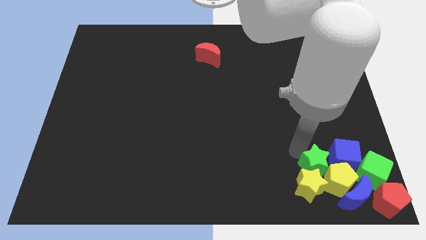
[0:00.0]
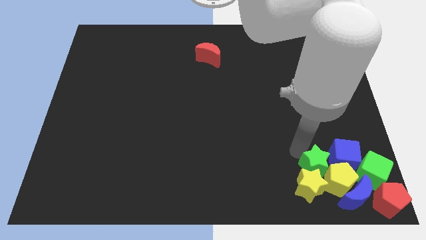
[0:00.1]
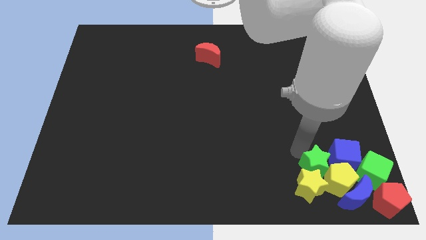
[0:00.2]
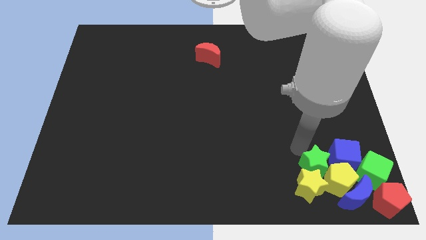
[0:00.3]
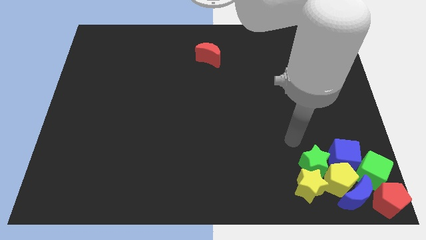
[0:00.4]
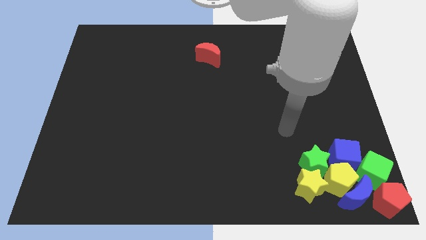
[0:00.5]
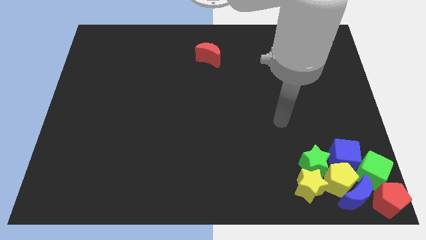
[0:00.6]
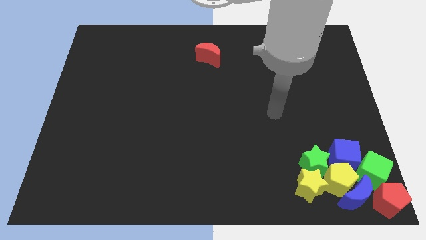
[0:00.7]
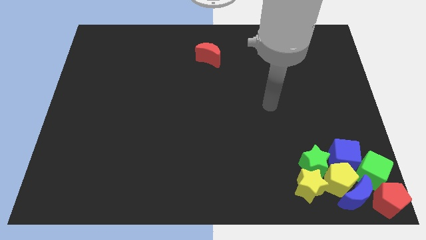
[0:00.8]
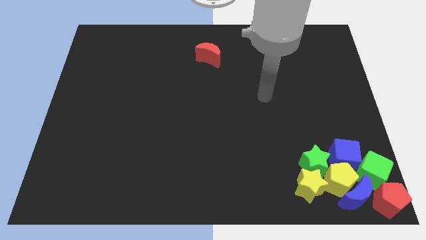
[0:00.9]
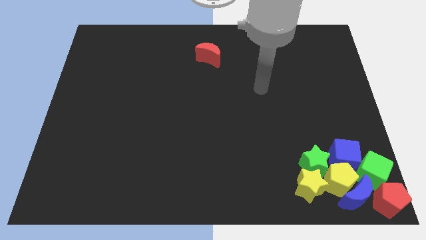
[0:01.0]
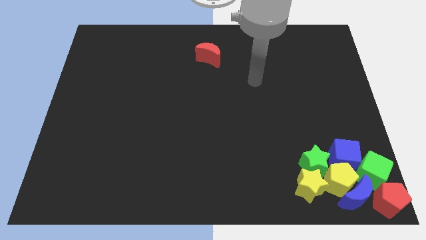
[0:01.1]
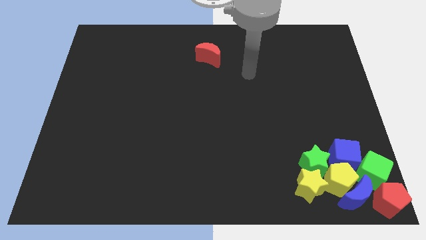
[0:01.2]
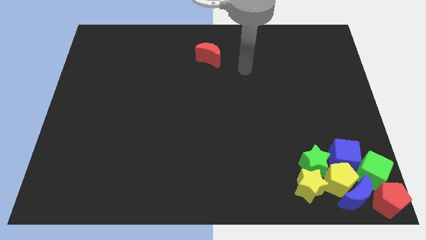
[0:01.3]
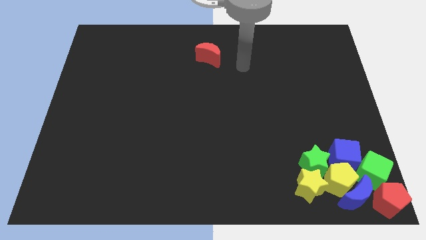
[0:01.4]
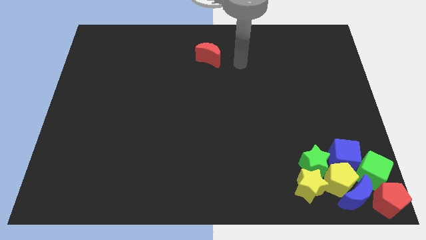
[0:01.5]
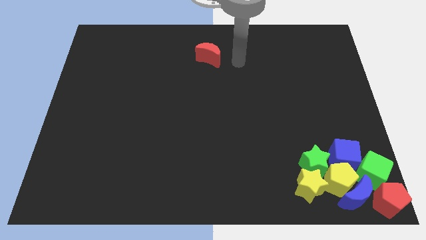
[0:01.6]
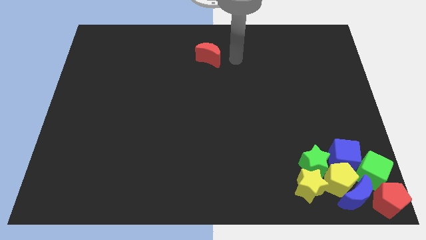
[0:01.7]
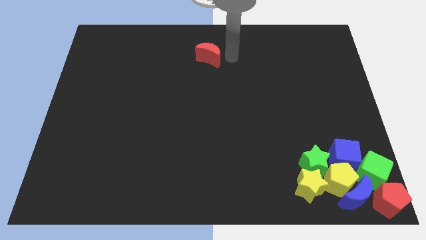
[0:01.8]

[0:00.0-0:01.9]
move your arm right to the red crescent

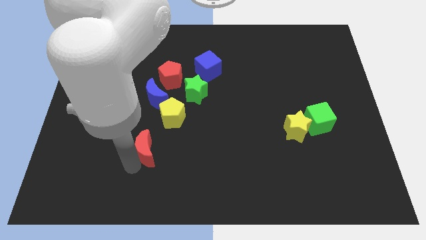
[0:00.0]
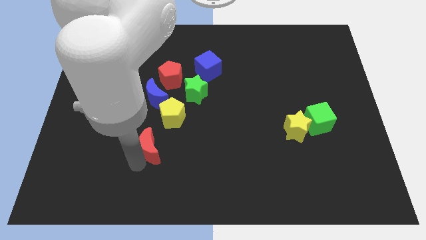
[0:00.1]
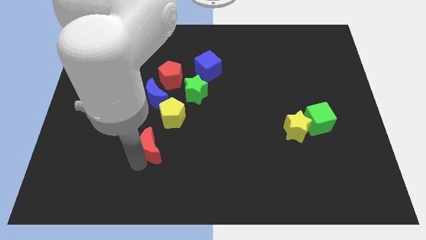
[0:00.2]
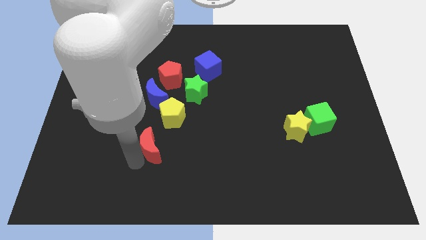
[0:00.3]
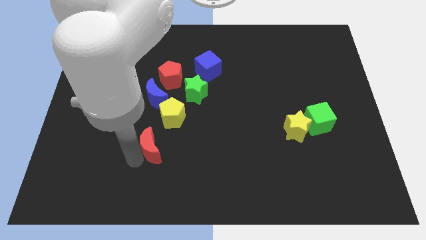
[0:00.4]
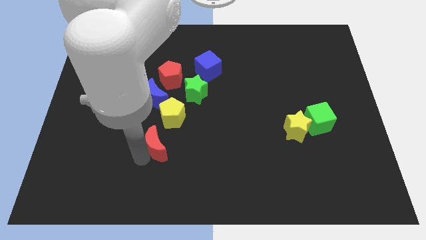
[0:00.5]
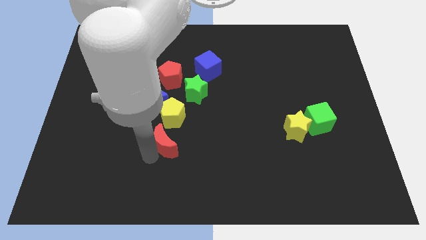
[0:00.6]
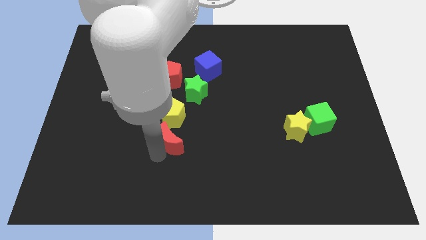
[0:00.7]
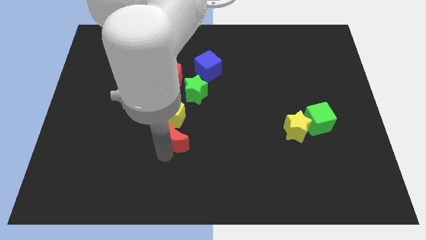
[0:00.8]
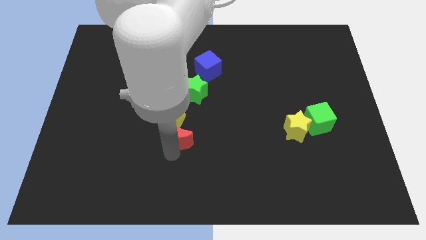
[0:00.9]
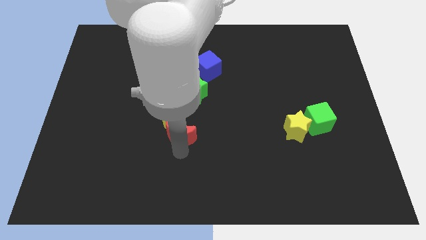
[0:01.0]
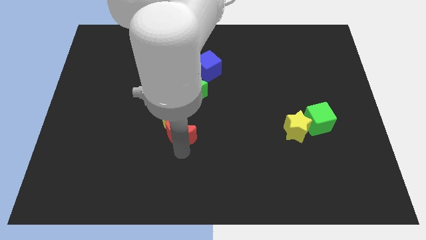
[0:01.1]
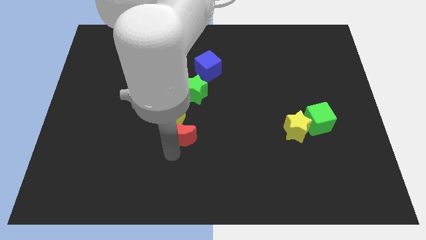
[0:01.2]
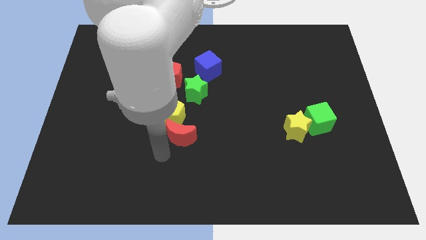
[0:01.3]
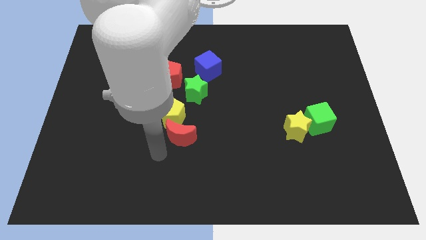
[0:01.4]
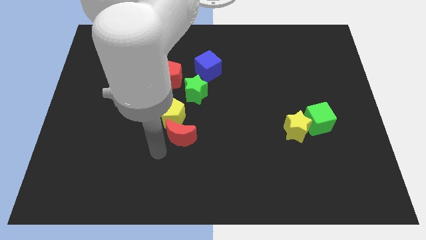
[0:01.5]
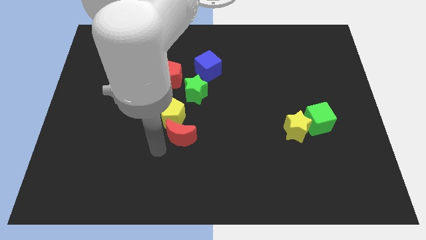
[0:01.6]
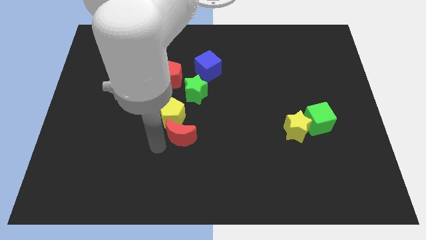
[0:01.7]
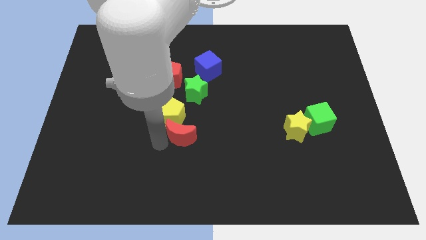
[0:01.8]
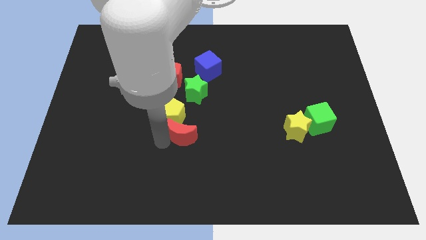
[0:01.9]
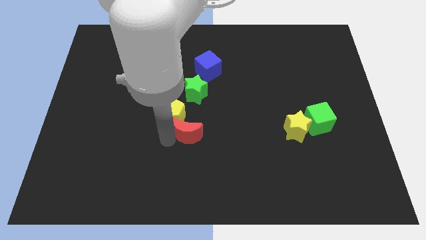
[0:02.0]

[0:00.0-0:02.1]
place the red moon below the yellow pentagon

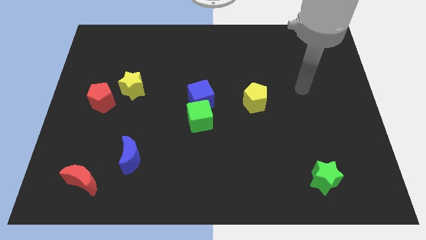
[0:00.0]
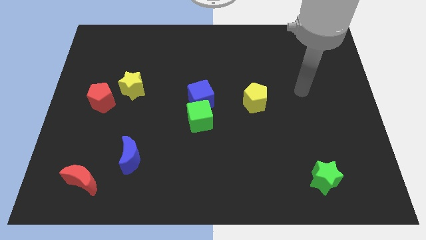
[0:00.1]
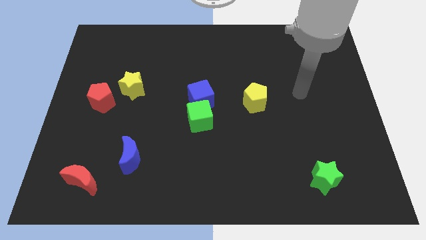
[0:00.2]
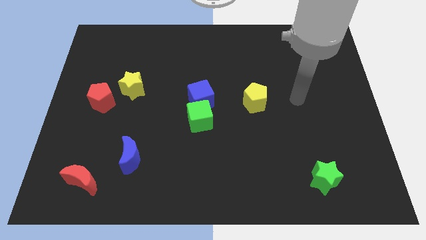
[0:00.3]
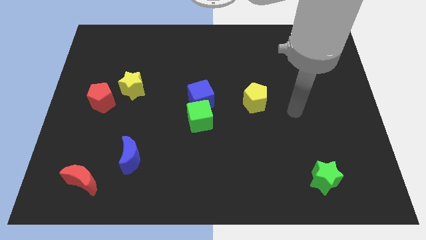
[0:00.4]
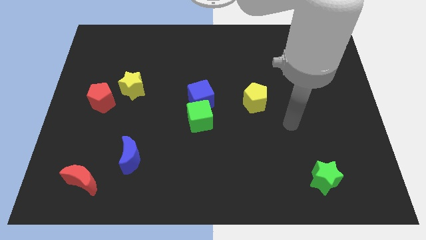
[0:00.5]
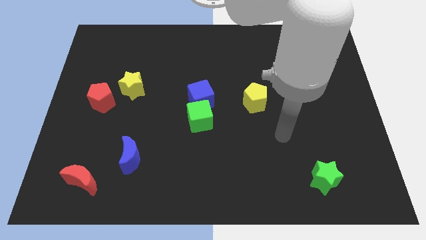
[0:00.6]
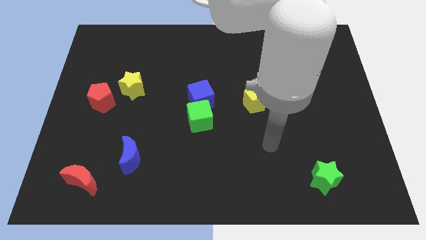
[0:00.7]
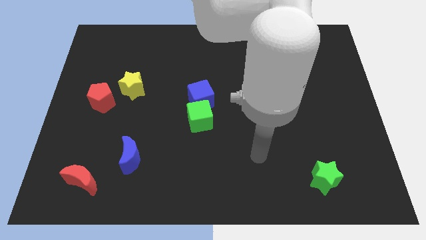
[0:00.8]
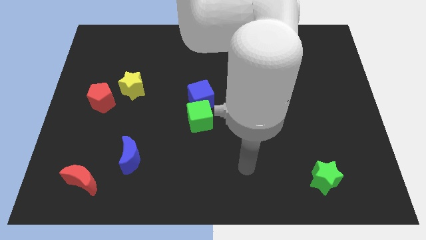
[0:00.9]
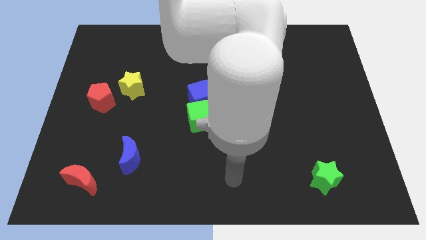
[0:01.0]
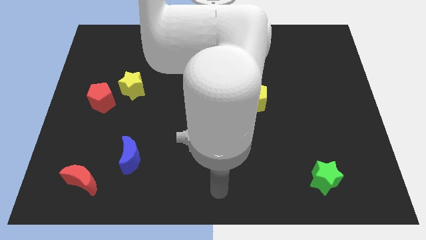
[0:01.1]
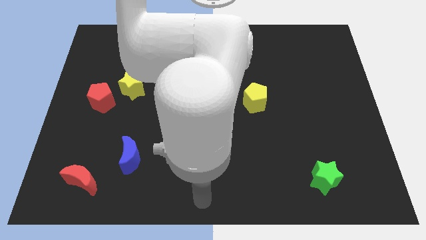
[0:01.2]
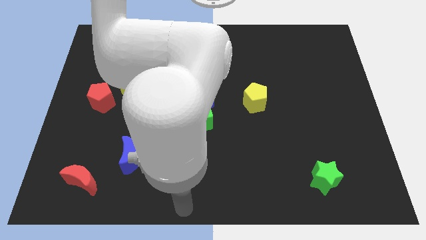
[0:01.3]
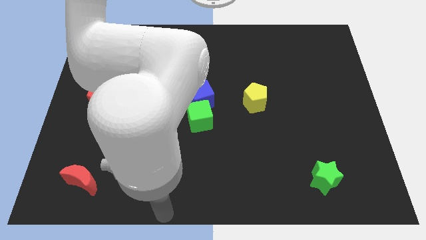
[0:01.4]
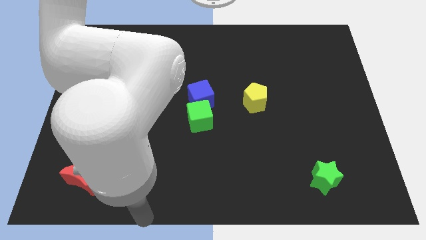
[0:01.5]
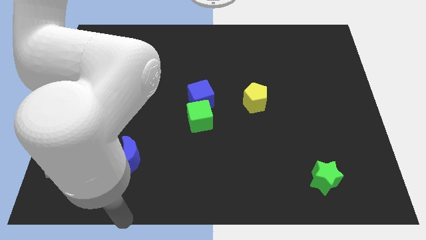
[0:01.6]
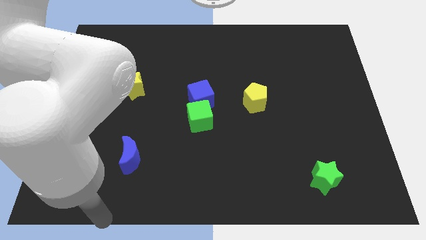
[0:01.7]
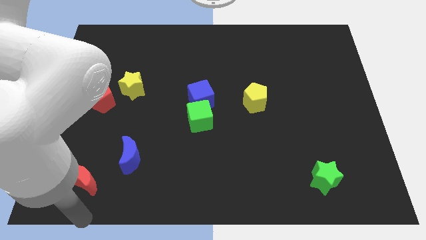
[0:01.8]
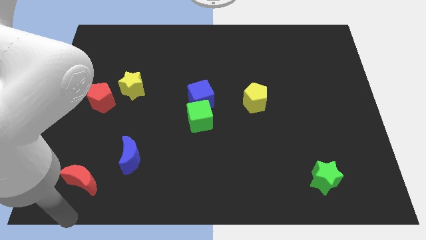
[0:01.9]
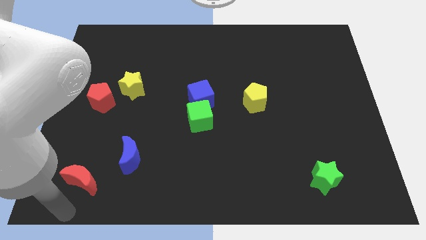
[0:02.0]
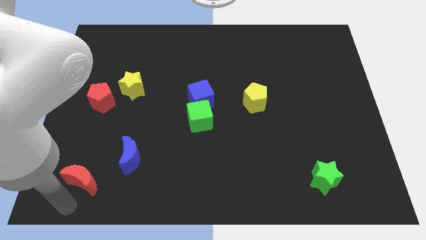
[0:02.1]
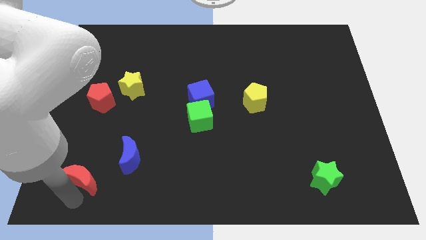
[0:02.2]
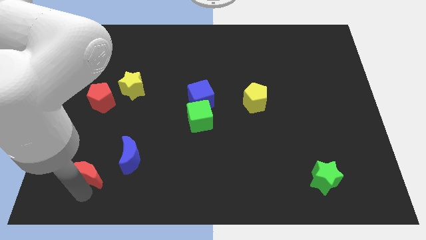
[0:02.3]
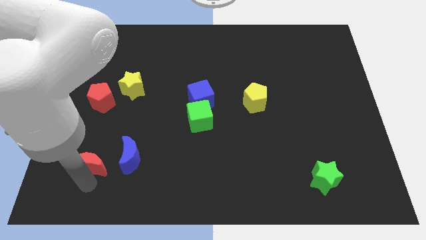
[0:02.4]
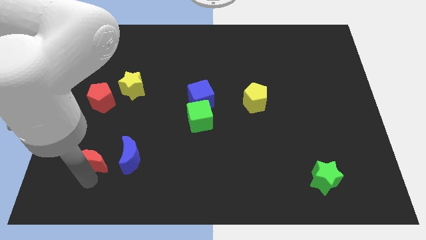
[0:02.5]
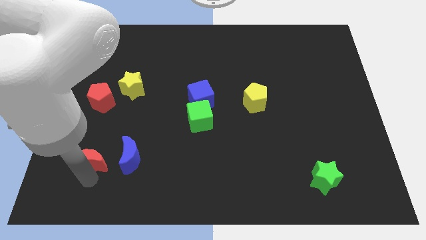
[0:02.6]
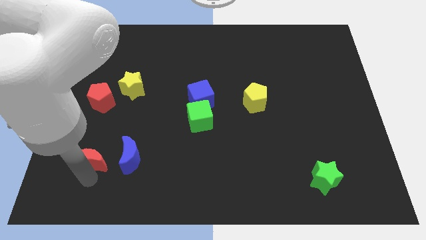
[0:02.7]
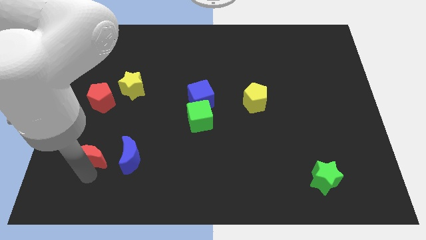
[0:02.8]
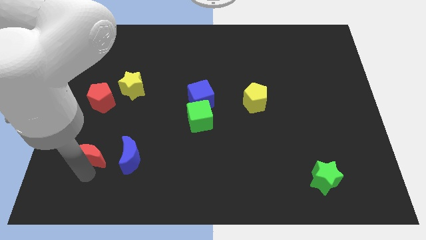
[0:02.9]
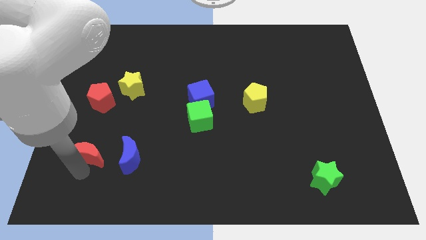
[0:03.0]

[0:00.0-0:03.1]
move red moon to the left of blue moon

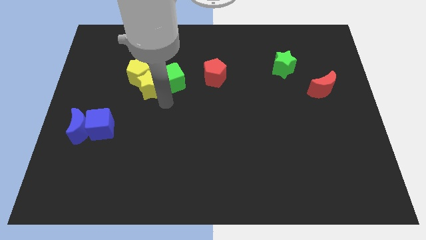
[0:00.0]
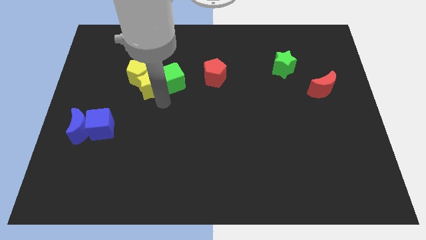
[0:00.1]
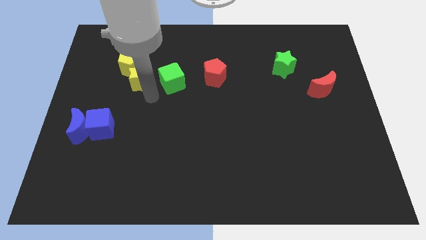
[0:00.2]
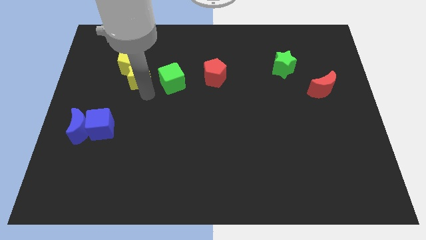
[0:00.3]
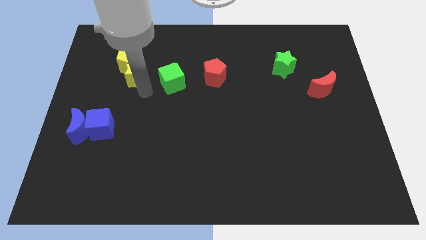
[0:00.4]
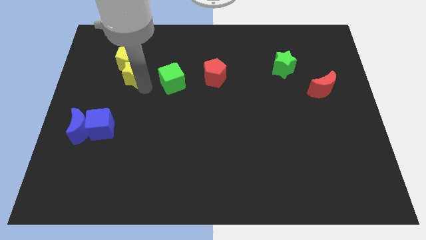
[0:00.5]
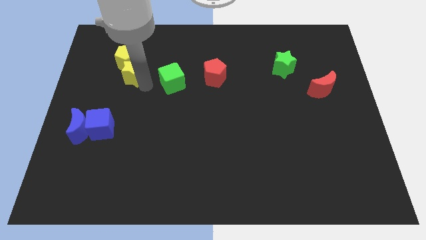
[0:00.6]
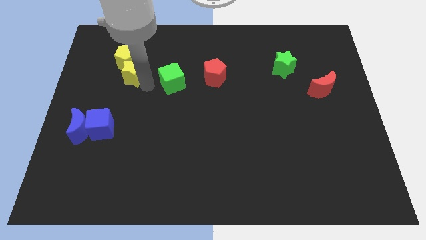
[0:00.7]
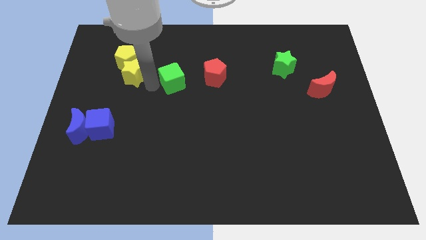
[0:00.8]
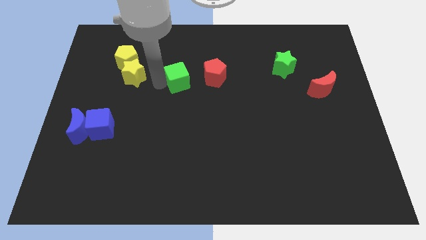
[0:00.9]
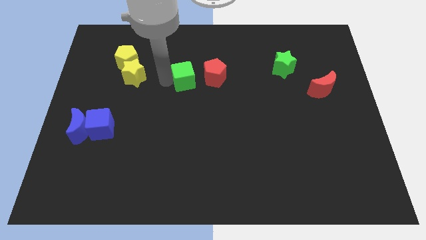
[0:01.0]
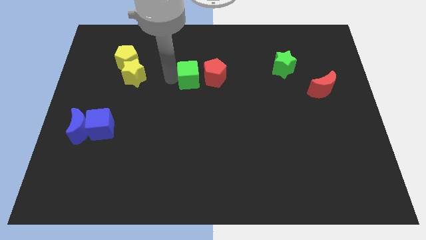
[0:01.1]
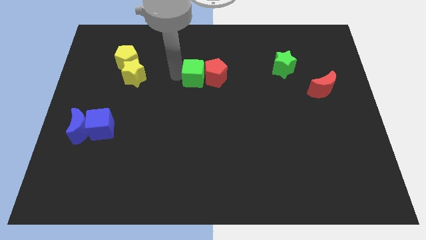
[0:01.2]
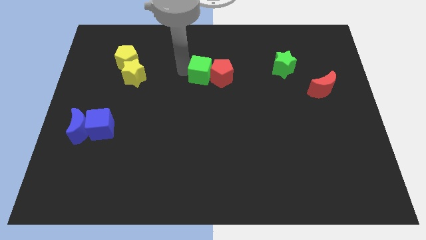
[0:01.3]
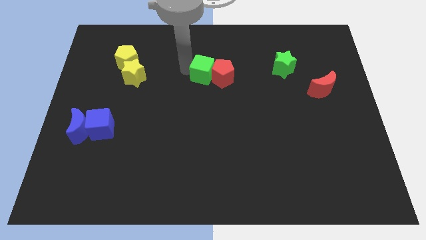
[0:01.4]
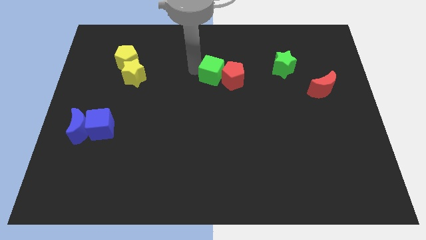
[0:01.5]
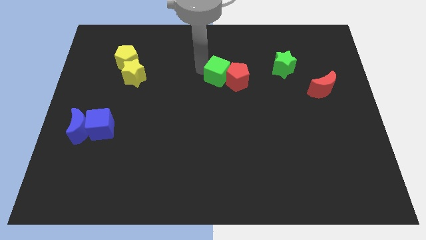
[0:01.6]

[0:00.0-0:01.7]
move green cube and red pentagon slightly right

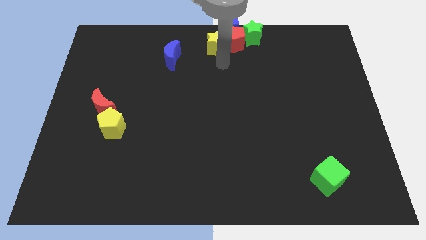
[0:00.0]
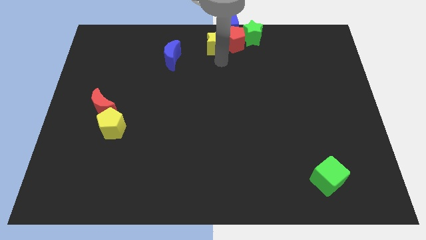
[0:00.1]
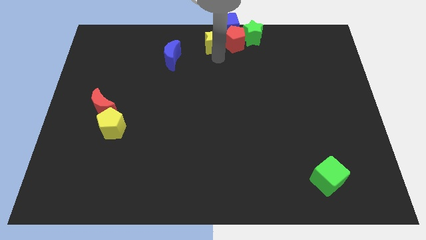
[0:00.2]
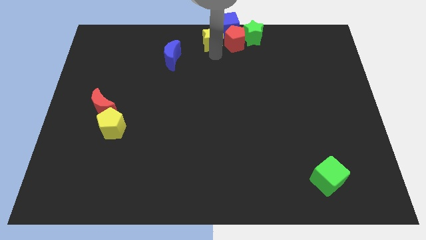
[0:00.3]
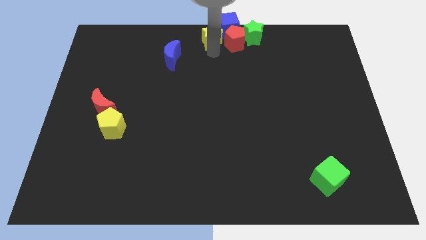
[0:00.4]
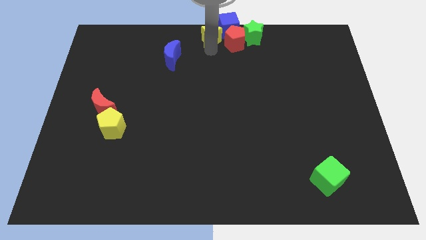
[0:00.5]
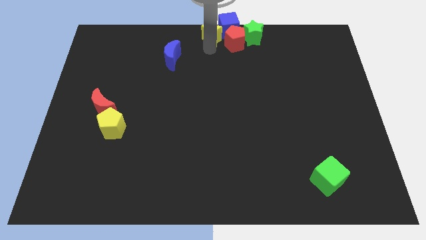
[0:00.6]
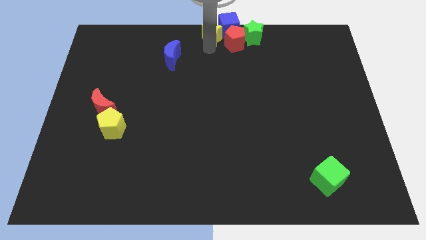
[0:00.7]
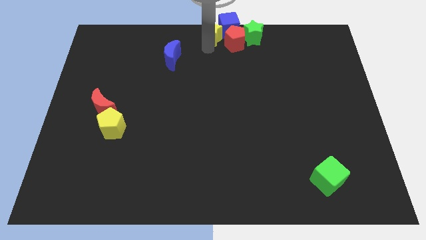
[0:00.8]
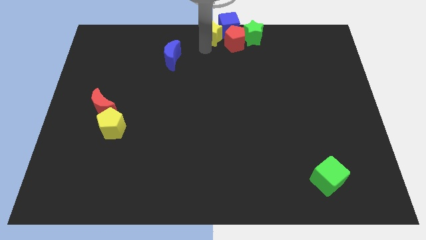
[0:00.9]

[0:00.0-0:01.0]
push the yellow star slightly to the top
